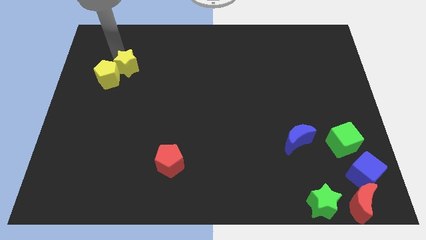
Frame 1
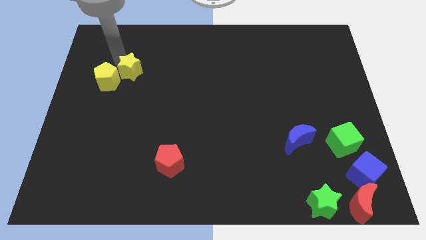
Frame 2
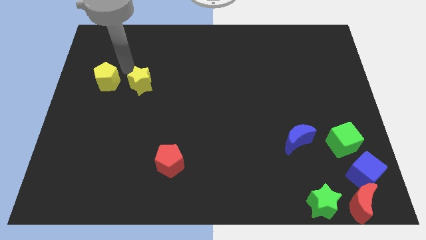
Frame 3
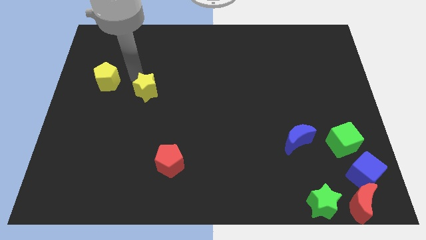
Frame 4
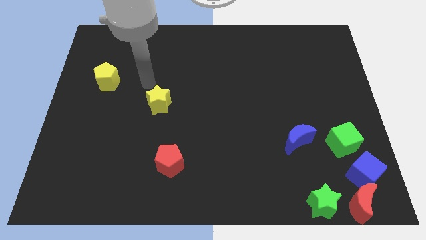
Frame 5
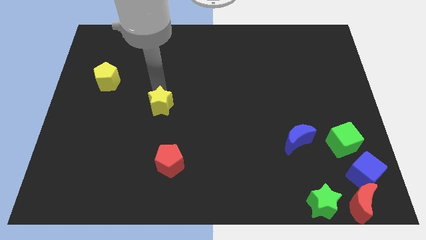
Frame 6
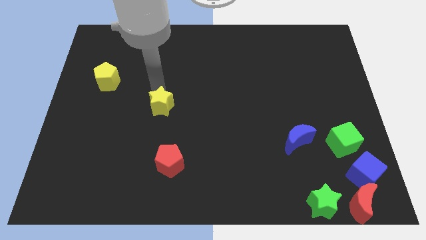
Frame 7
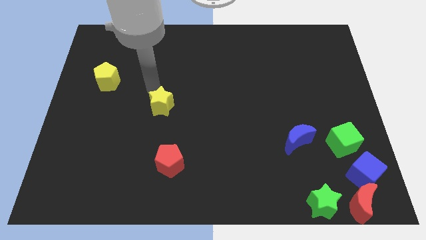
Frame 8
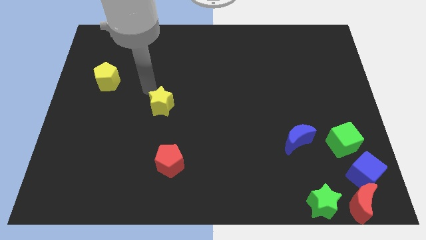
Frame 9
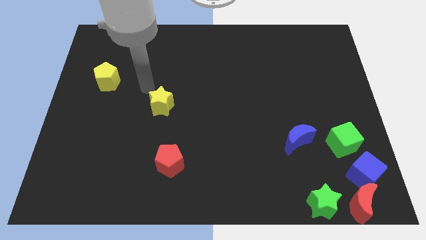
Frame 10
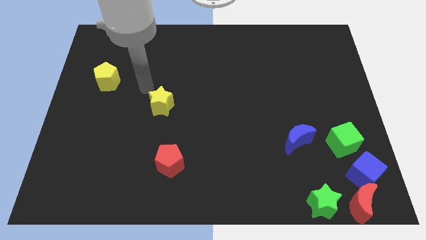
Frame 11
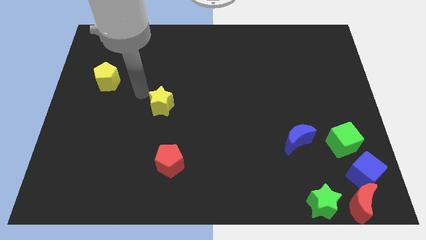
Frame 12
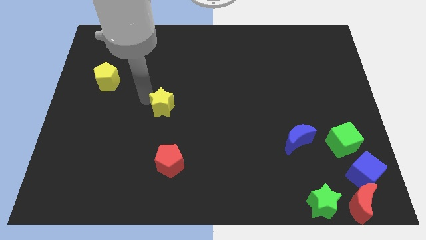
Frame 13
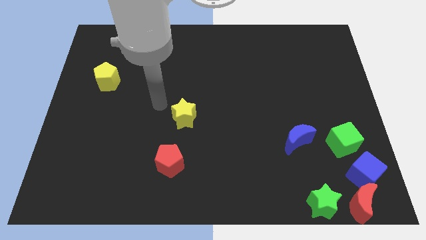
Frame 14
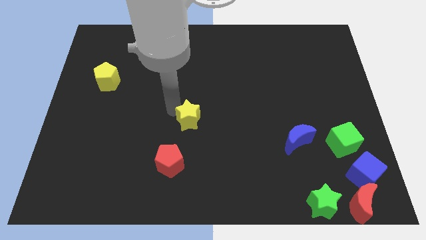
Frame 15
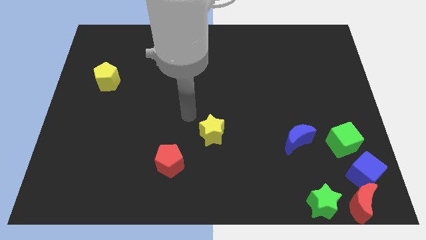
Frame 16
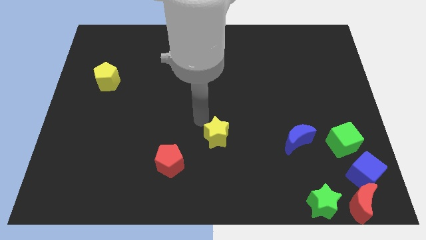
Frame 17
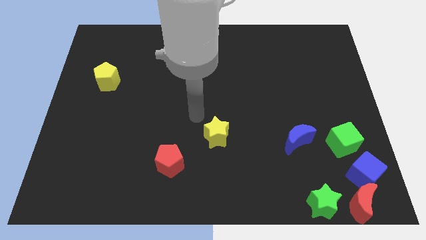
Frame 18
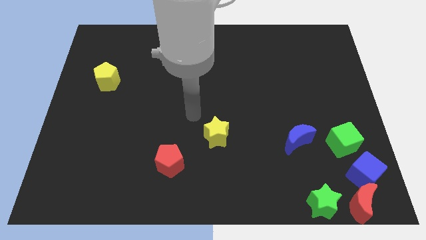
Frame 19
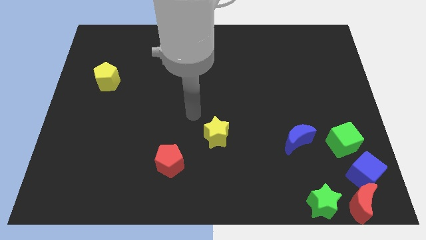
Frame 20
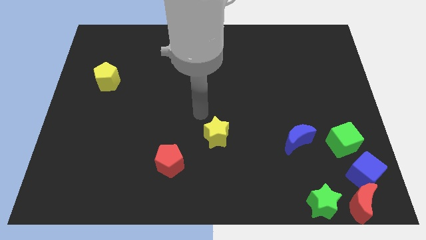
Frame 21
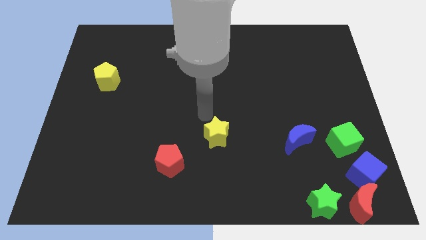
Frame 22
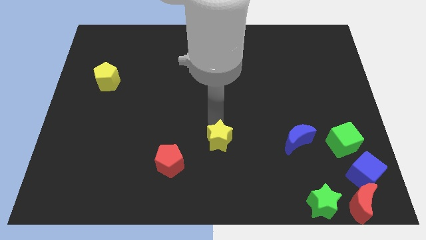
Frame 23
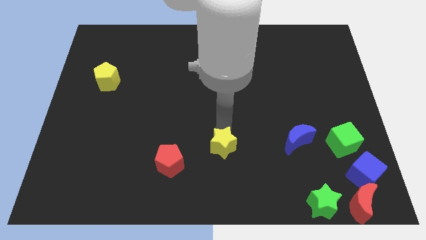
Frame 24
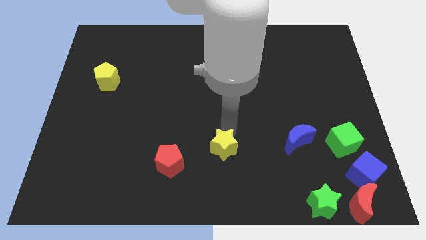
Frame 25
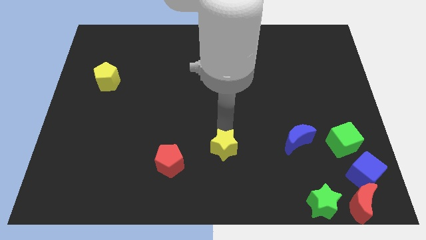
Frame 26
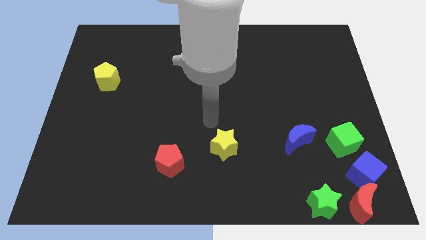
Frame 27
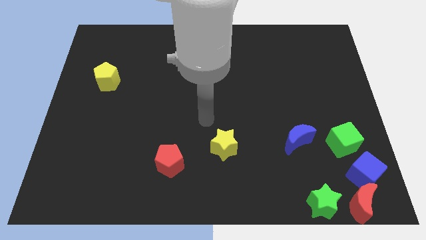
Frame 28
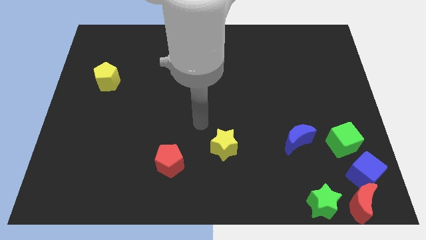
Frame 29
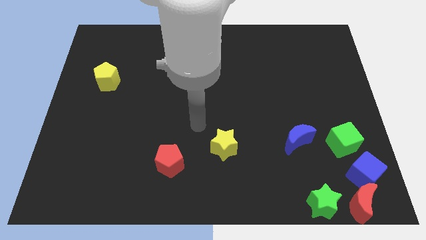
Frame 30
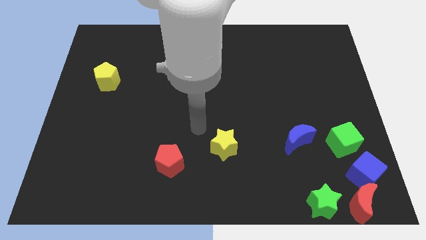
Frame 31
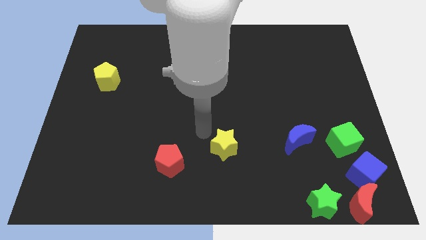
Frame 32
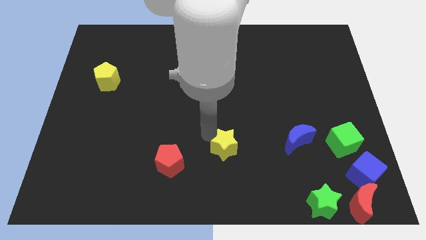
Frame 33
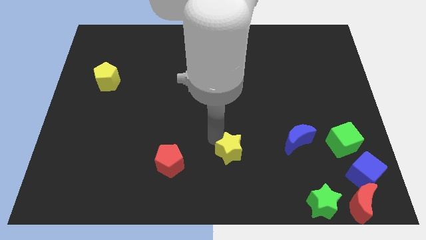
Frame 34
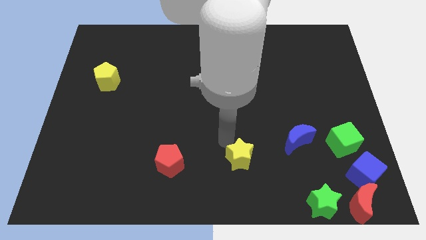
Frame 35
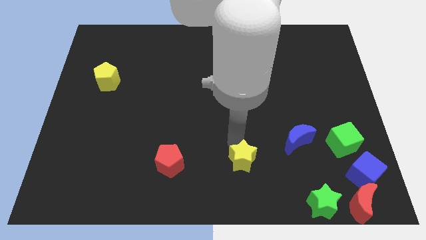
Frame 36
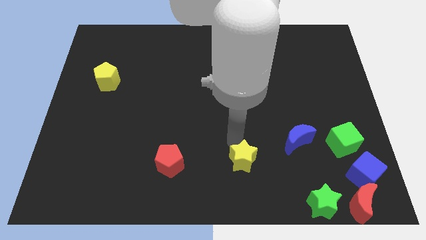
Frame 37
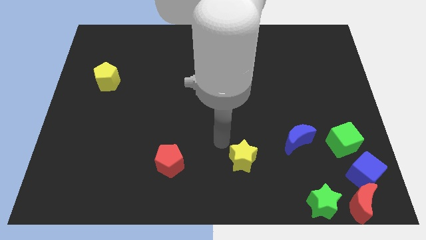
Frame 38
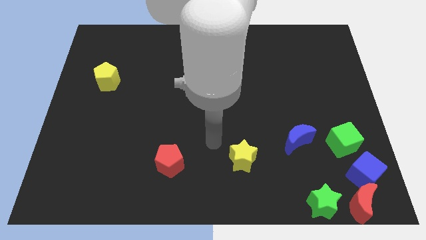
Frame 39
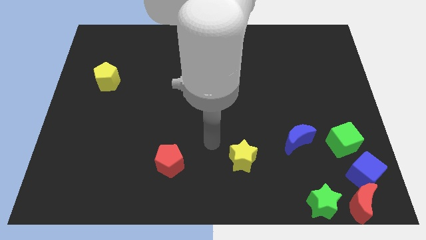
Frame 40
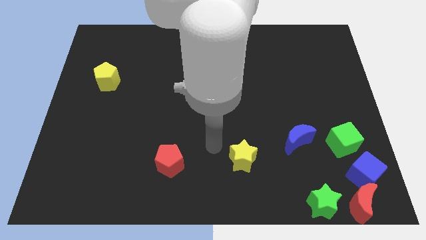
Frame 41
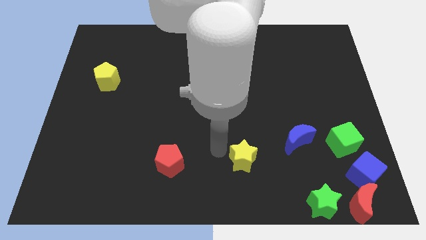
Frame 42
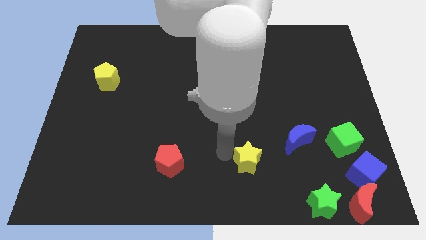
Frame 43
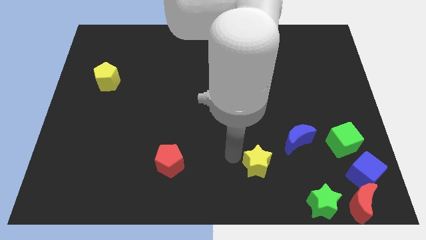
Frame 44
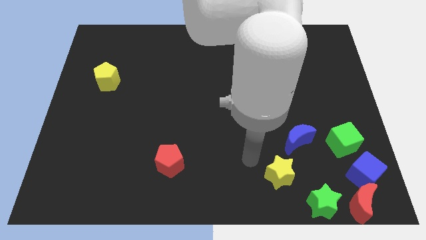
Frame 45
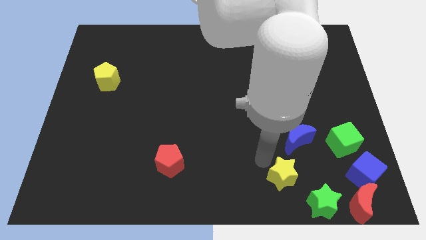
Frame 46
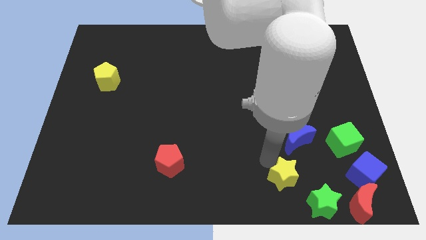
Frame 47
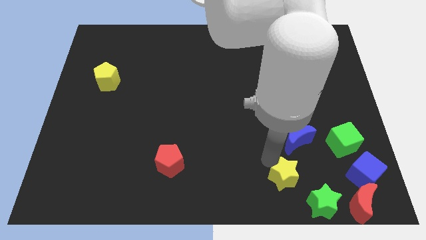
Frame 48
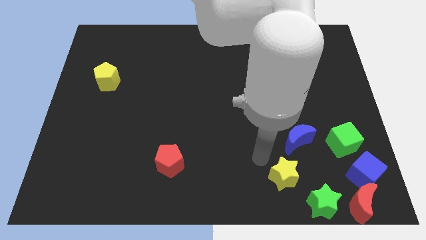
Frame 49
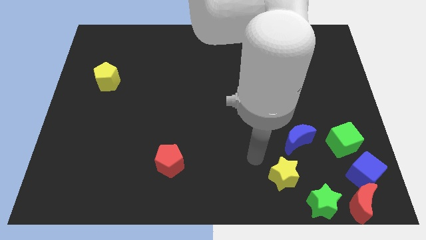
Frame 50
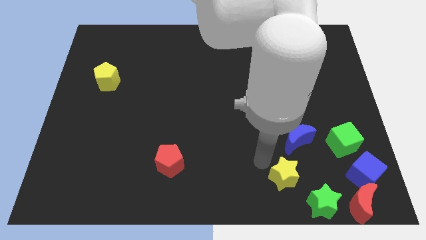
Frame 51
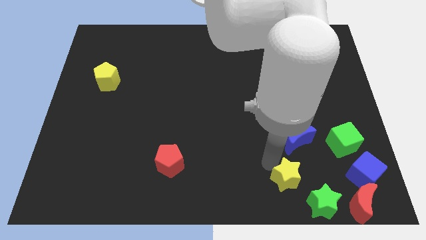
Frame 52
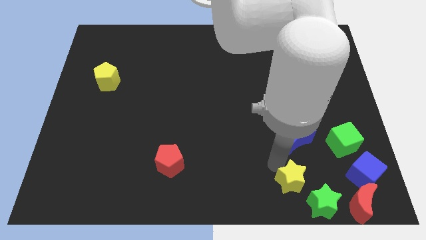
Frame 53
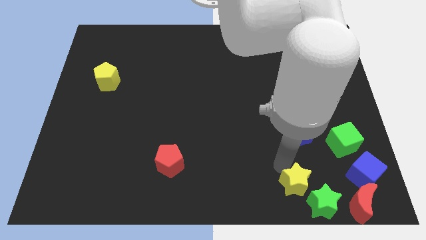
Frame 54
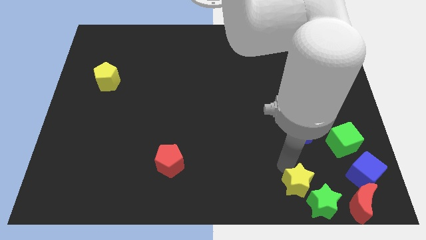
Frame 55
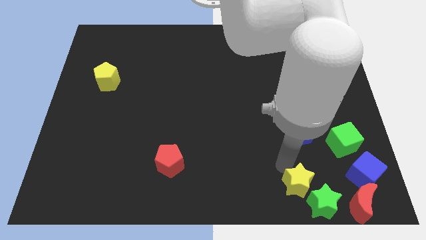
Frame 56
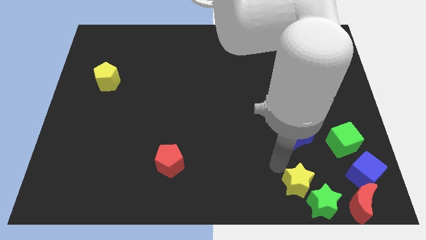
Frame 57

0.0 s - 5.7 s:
push the yellow star to the bottom of blue crescent

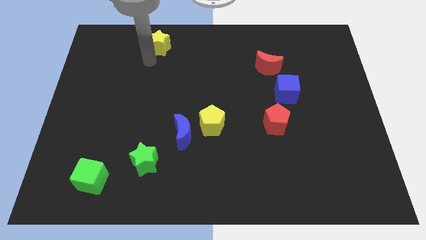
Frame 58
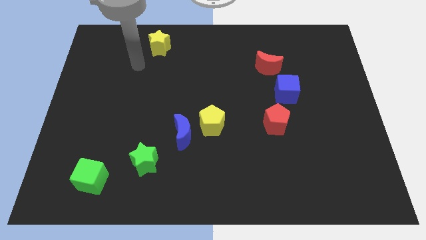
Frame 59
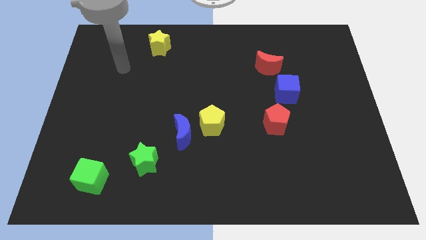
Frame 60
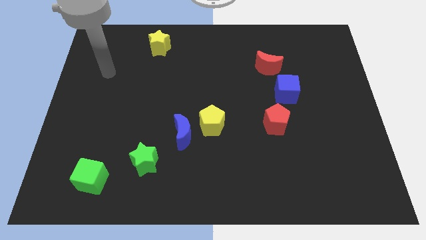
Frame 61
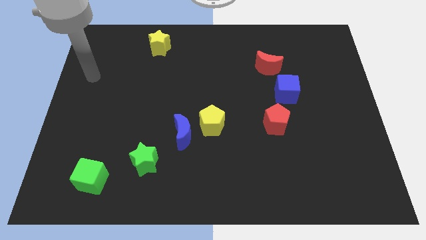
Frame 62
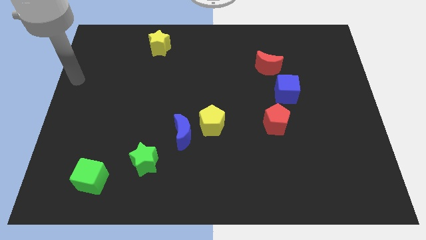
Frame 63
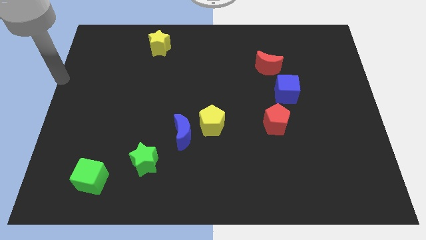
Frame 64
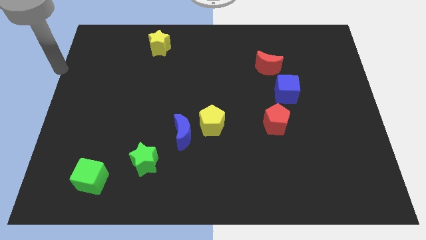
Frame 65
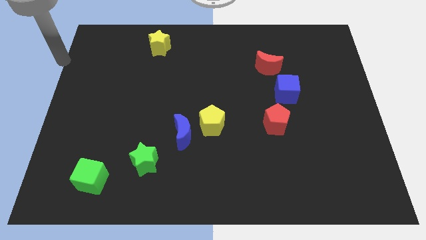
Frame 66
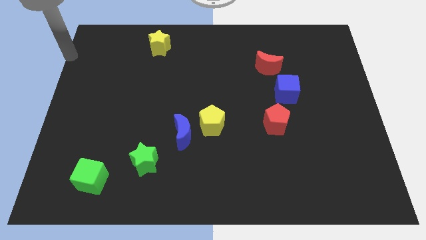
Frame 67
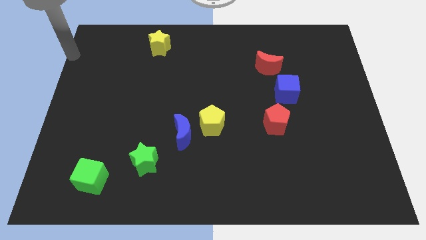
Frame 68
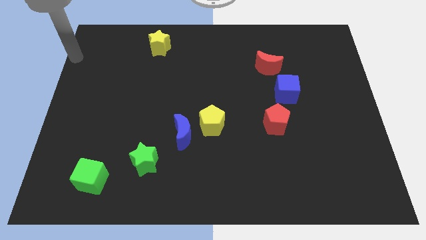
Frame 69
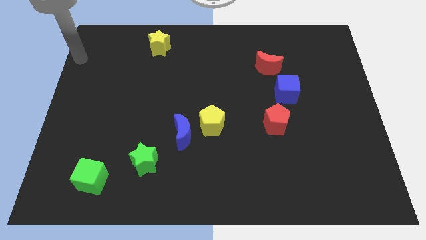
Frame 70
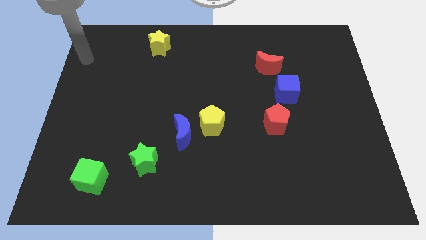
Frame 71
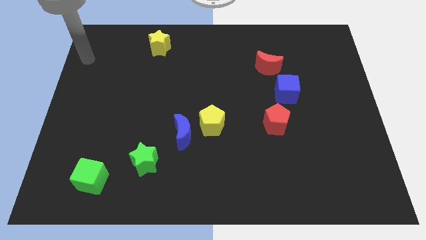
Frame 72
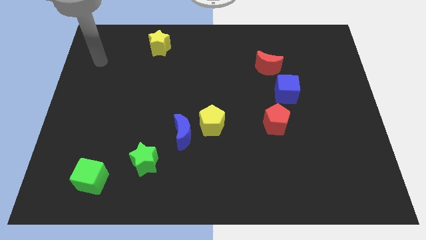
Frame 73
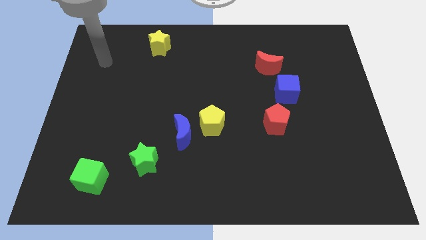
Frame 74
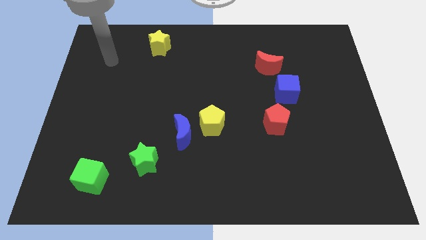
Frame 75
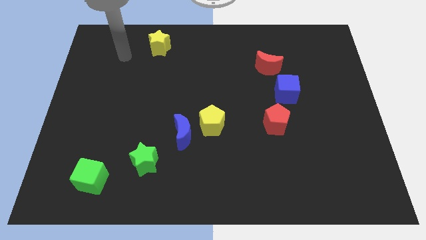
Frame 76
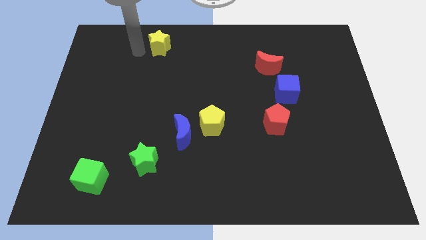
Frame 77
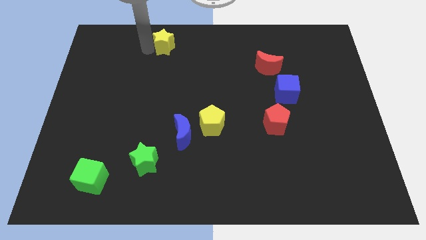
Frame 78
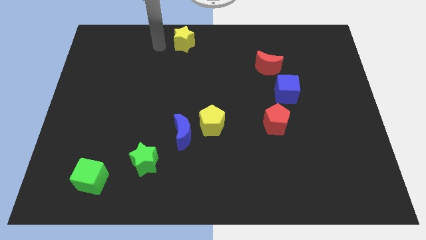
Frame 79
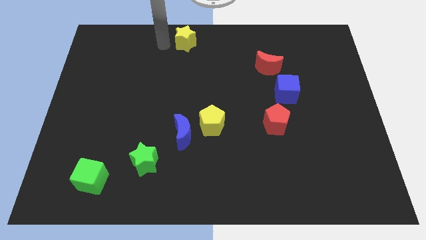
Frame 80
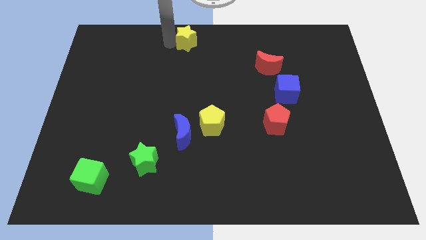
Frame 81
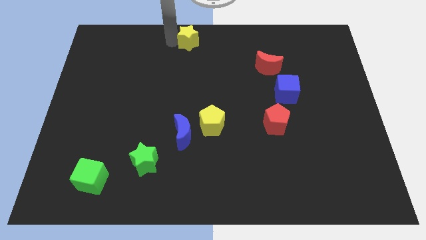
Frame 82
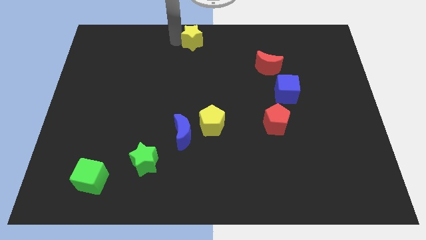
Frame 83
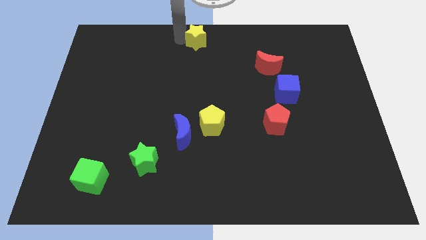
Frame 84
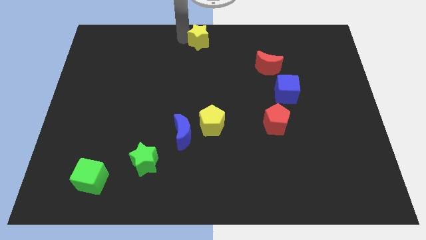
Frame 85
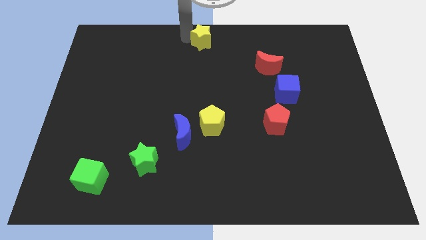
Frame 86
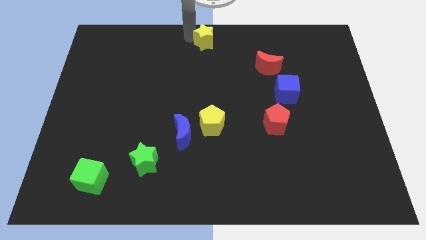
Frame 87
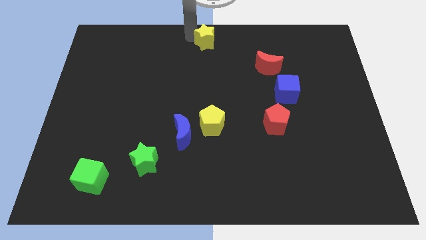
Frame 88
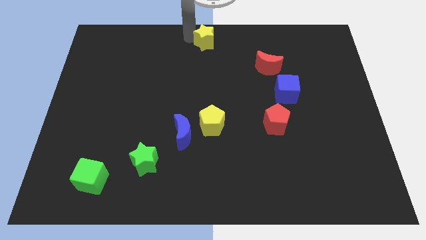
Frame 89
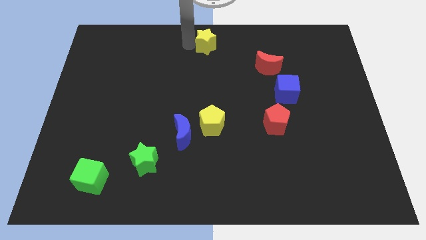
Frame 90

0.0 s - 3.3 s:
move yellow star vertically above yellow pentagon
